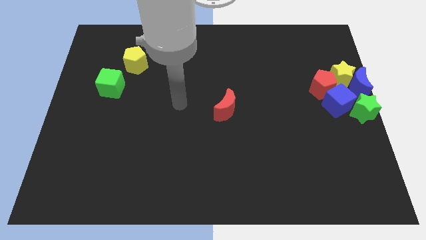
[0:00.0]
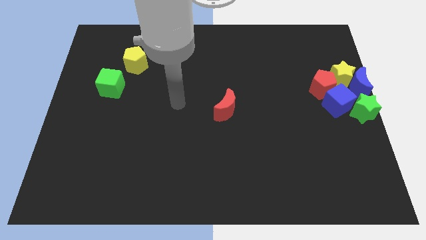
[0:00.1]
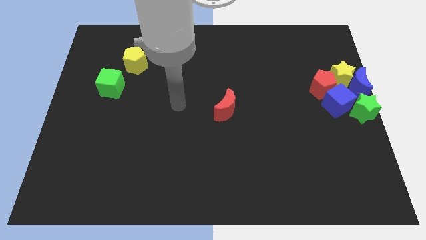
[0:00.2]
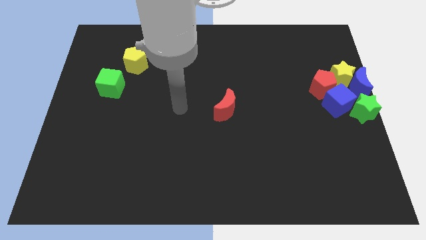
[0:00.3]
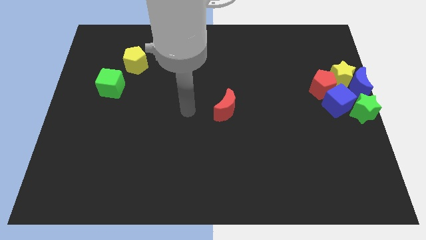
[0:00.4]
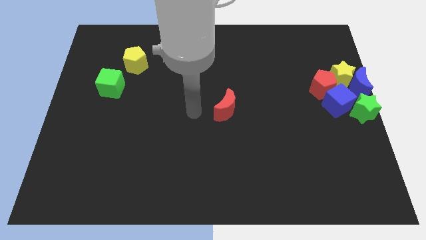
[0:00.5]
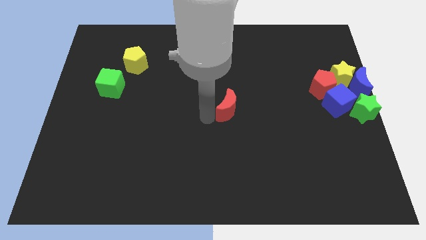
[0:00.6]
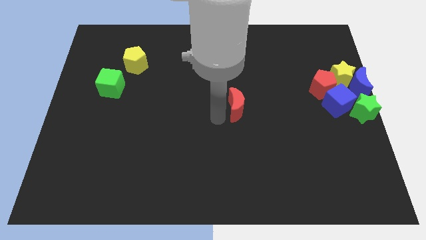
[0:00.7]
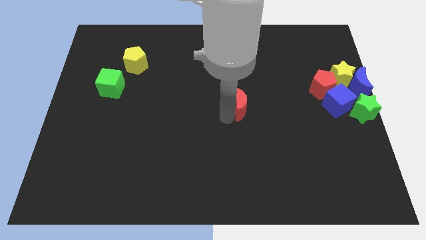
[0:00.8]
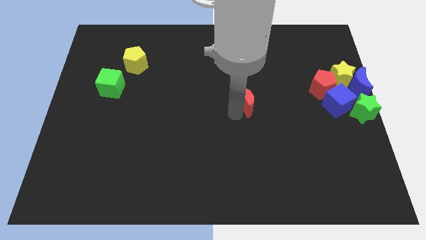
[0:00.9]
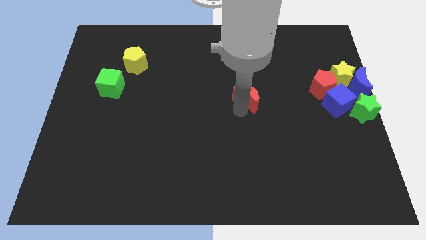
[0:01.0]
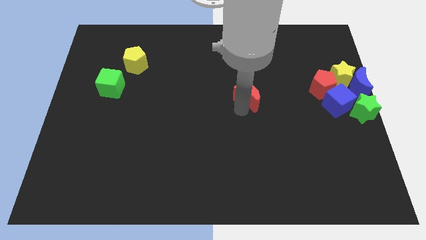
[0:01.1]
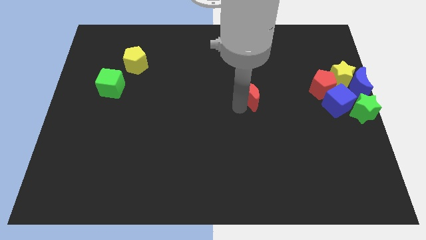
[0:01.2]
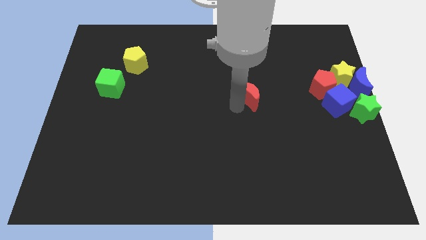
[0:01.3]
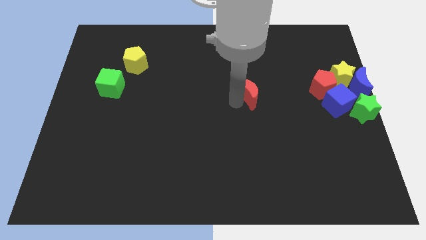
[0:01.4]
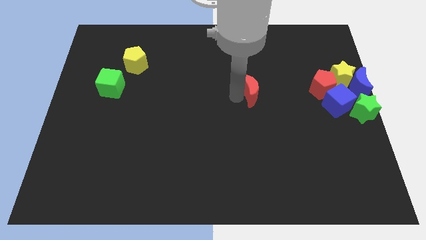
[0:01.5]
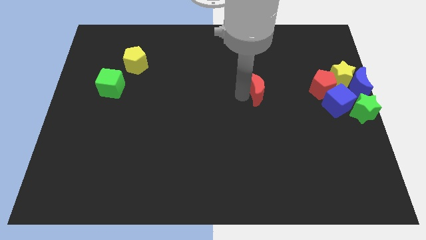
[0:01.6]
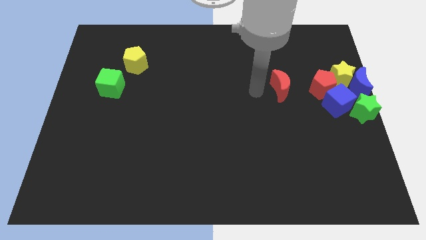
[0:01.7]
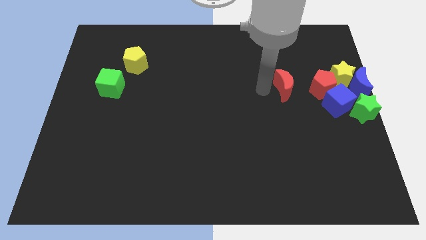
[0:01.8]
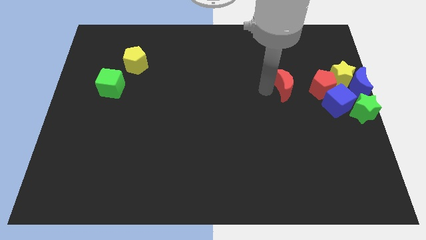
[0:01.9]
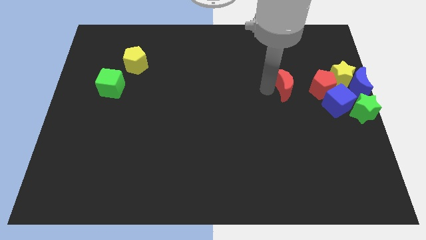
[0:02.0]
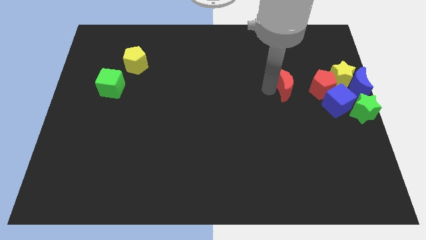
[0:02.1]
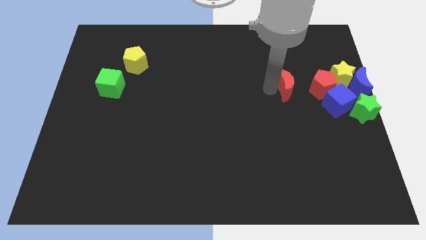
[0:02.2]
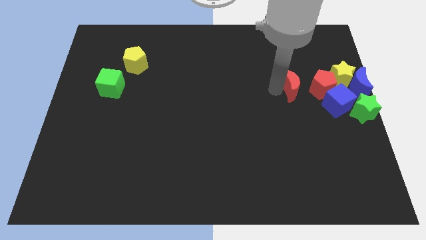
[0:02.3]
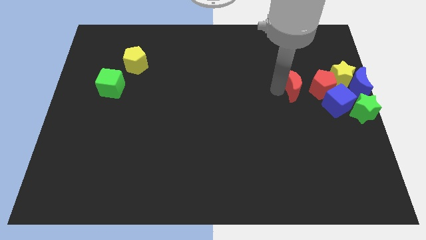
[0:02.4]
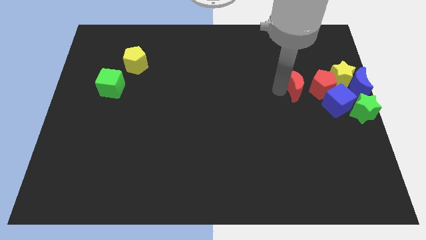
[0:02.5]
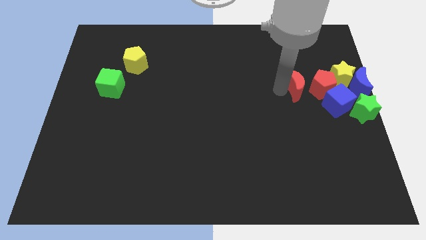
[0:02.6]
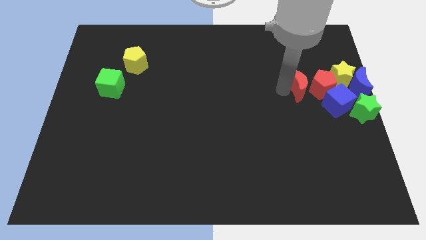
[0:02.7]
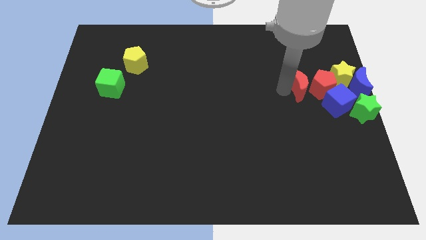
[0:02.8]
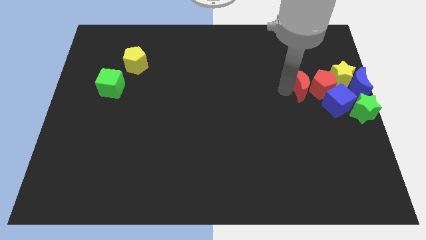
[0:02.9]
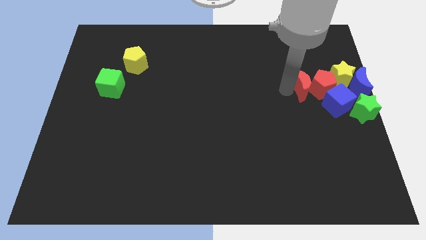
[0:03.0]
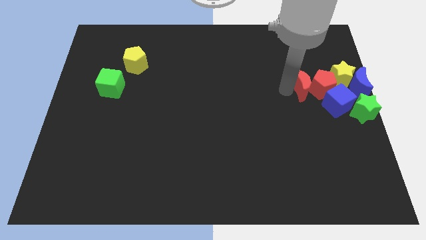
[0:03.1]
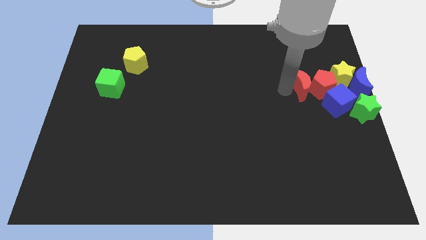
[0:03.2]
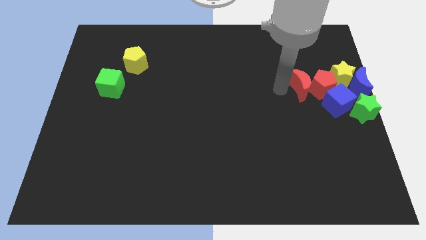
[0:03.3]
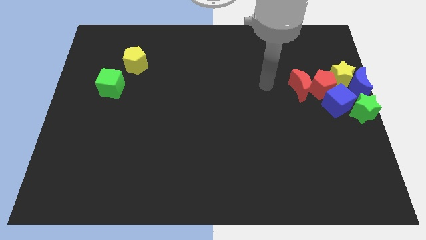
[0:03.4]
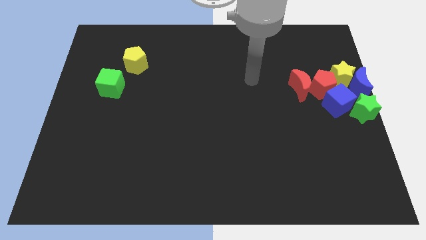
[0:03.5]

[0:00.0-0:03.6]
move the red moon near to the red pentagon

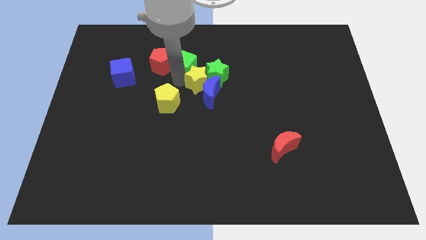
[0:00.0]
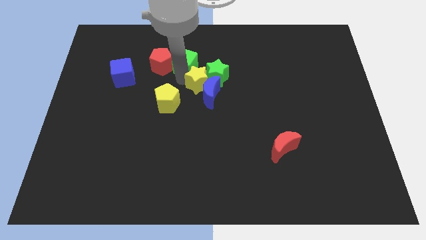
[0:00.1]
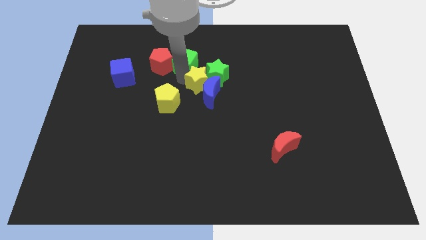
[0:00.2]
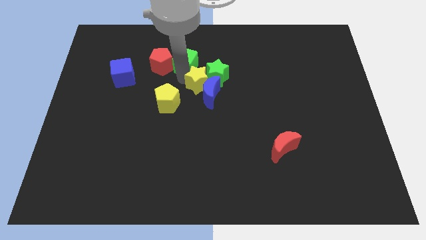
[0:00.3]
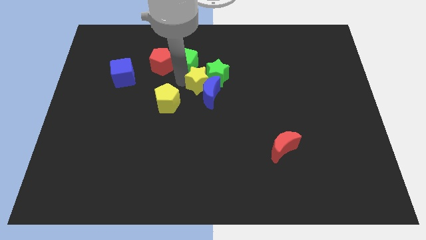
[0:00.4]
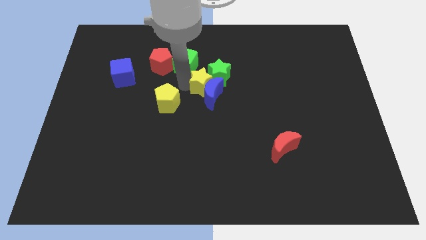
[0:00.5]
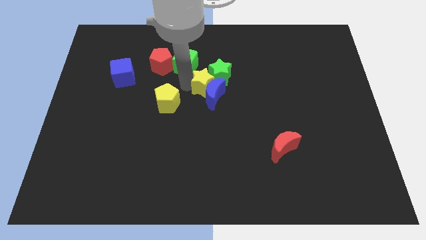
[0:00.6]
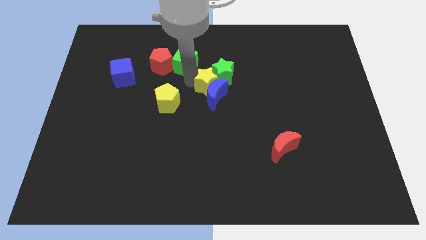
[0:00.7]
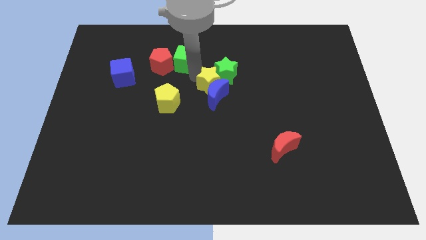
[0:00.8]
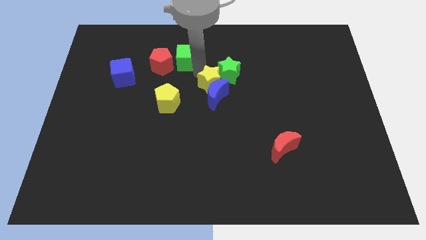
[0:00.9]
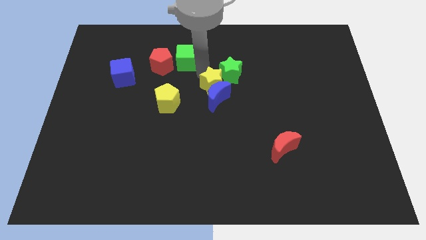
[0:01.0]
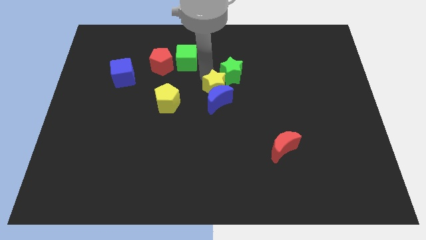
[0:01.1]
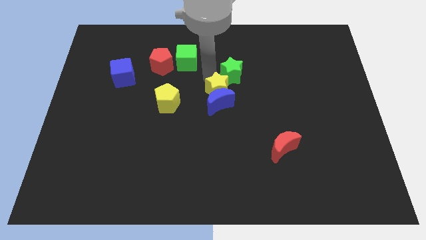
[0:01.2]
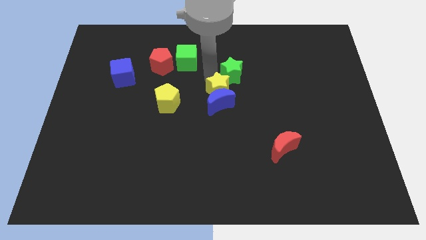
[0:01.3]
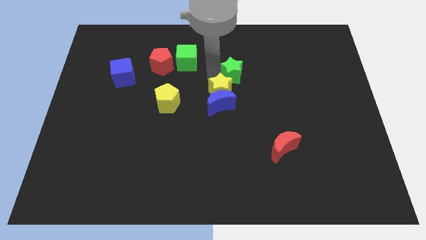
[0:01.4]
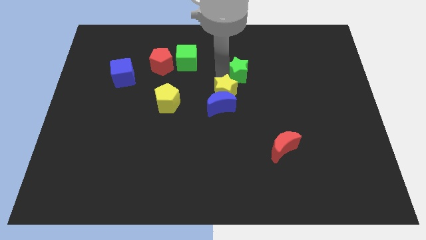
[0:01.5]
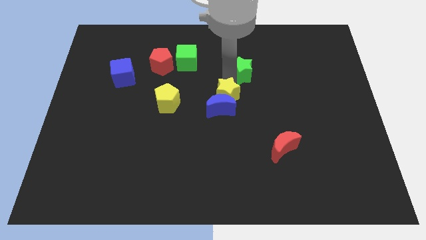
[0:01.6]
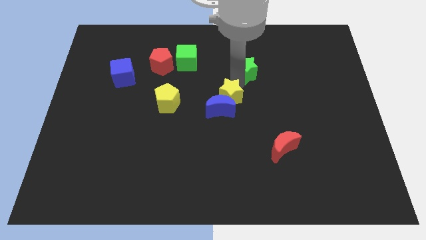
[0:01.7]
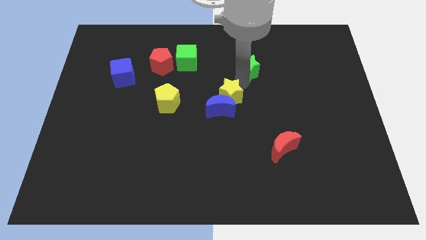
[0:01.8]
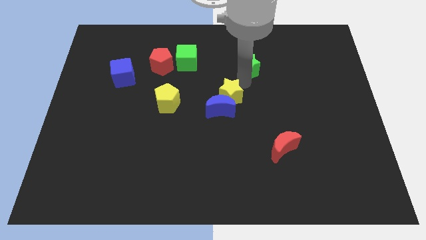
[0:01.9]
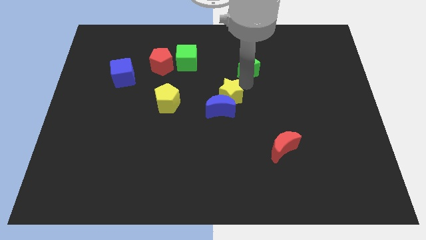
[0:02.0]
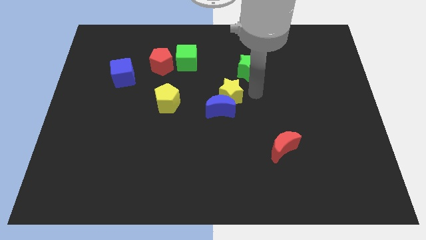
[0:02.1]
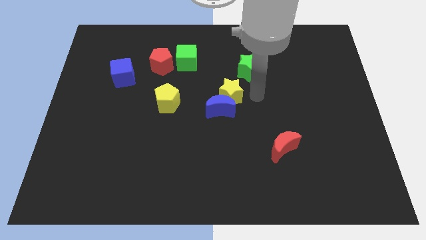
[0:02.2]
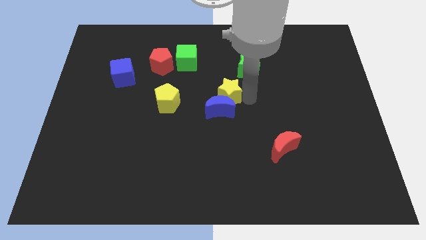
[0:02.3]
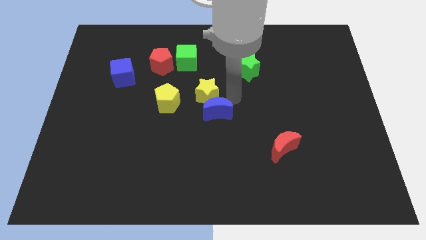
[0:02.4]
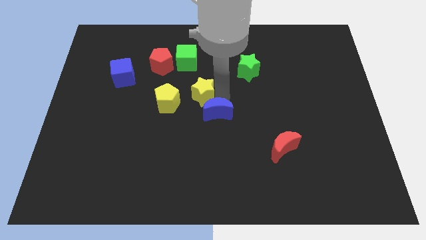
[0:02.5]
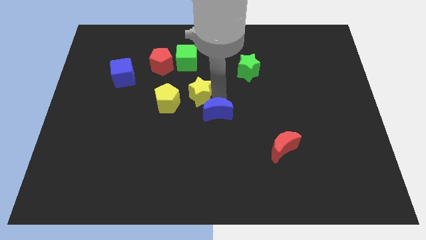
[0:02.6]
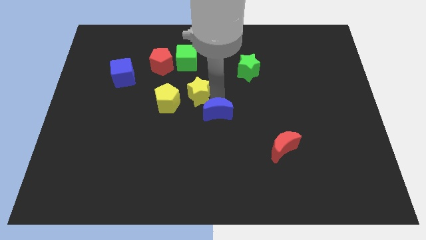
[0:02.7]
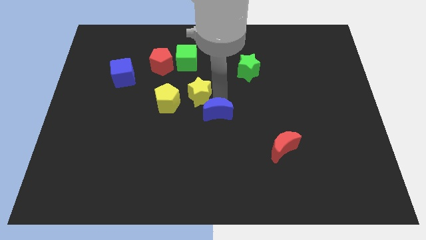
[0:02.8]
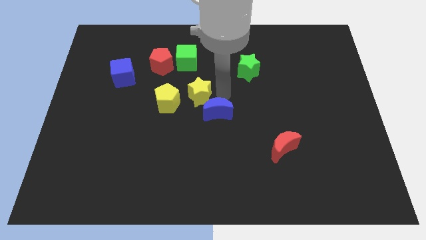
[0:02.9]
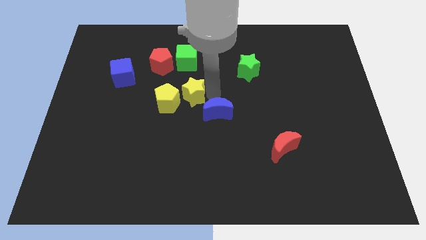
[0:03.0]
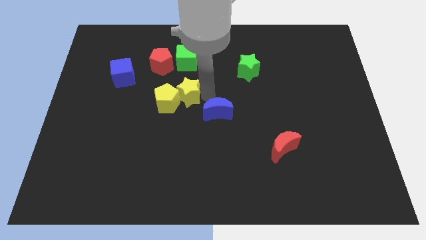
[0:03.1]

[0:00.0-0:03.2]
make a triangle out of green blocks and the yellow star

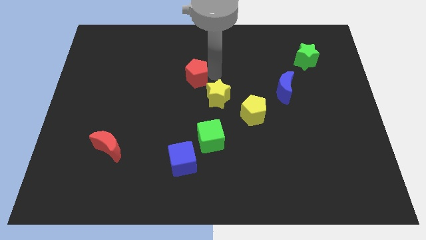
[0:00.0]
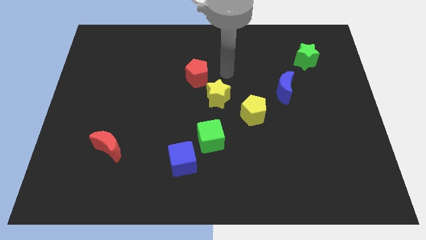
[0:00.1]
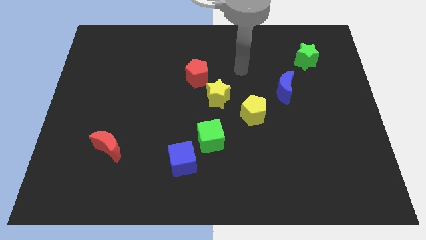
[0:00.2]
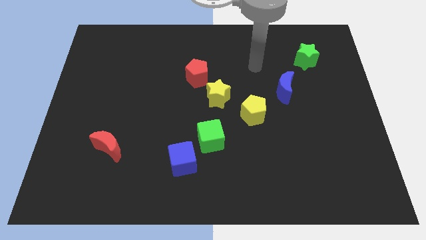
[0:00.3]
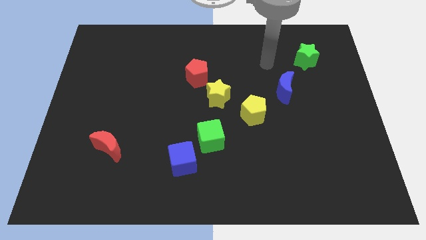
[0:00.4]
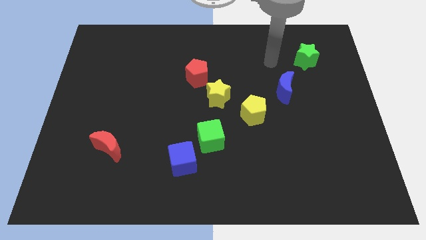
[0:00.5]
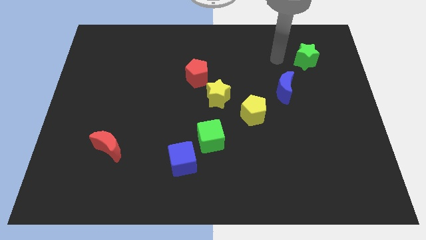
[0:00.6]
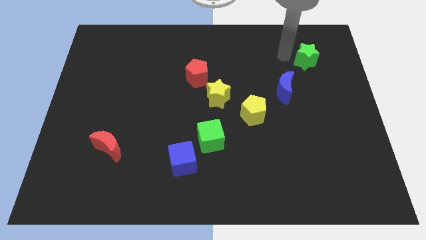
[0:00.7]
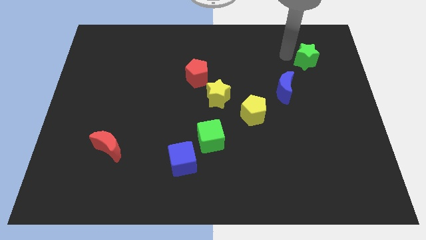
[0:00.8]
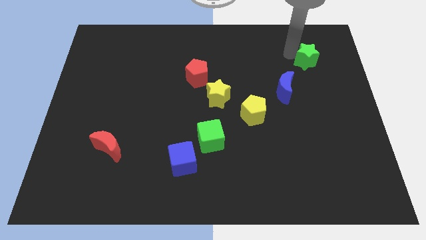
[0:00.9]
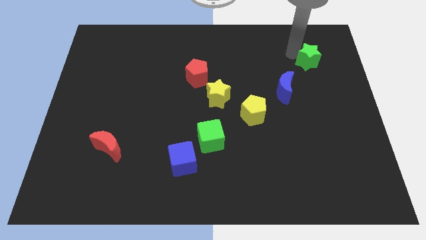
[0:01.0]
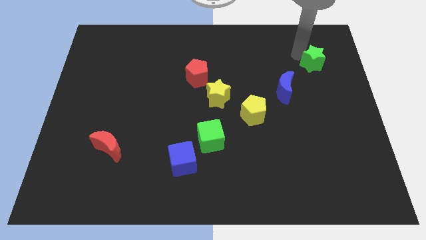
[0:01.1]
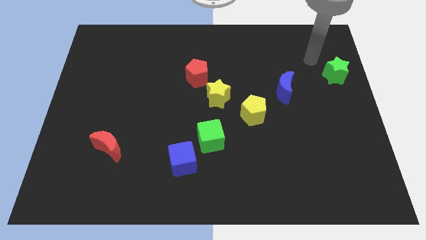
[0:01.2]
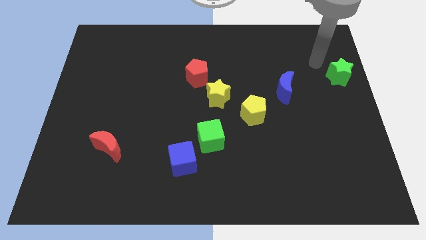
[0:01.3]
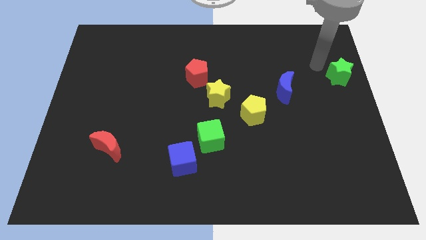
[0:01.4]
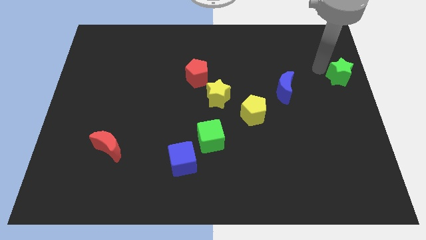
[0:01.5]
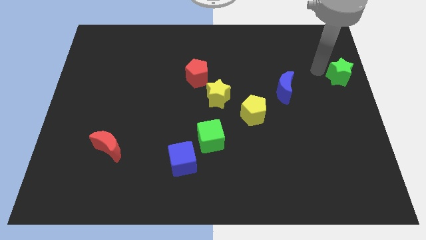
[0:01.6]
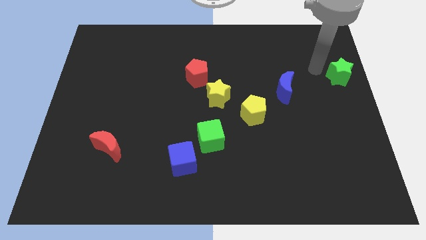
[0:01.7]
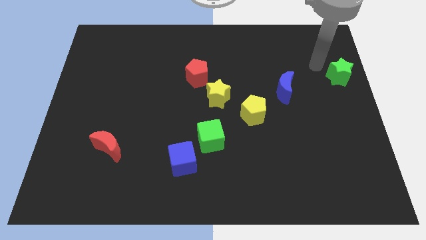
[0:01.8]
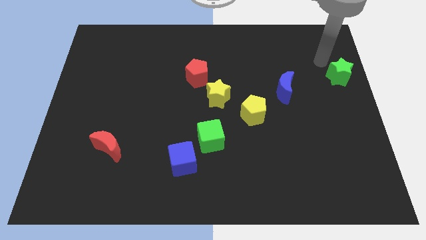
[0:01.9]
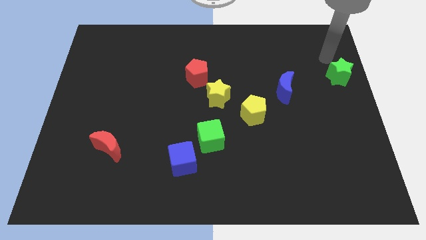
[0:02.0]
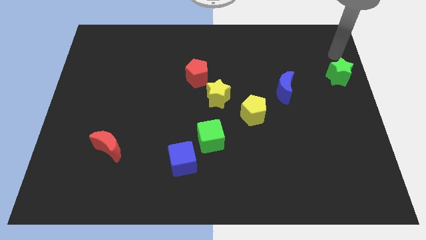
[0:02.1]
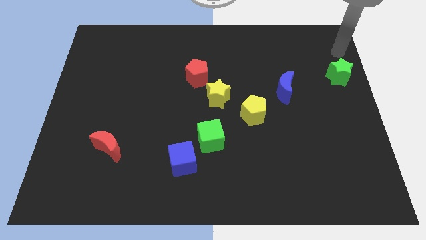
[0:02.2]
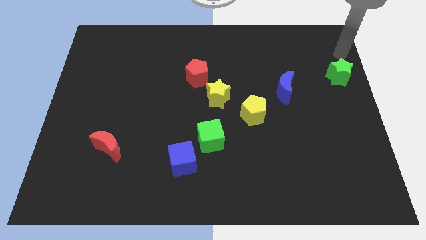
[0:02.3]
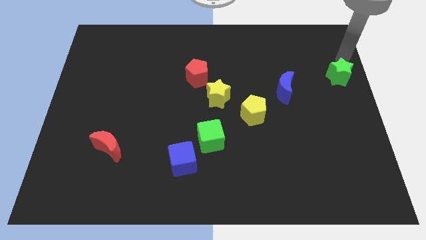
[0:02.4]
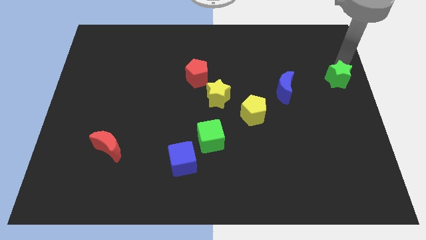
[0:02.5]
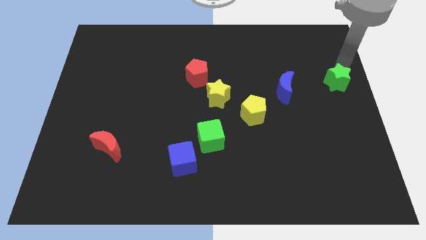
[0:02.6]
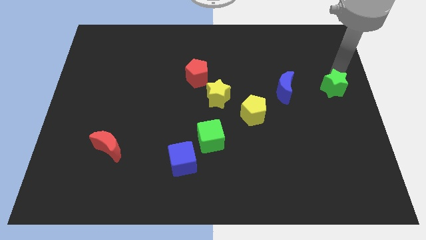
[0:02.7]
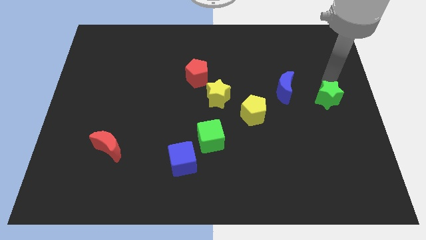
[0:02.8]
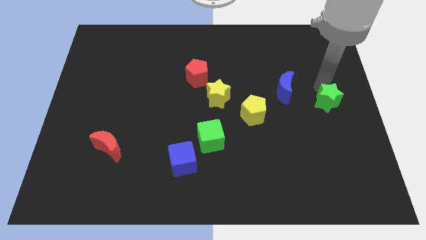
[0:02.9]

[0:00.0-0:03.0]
push the green star to the right side of the board
